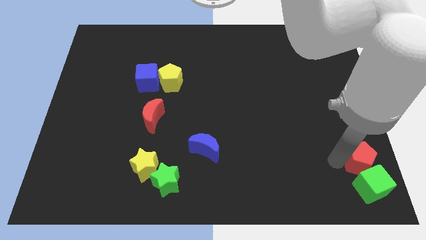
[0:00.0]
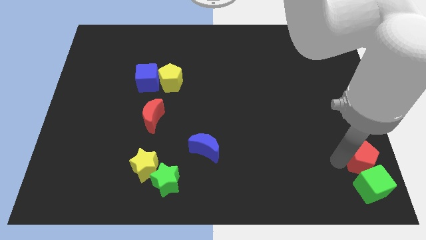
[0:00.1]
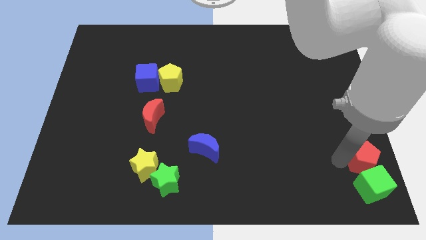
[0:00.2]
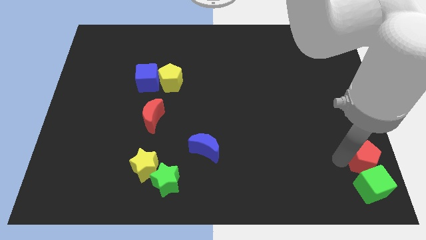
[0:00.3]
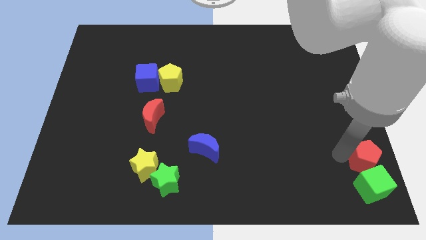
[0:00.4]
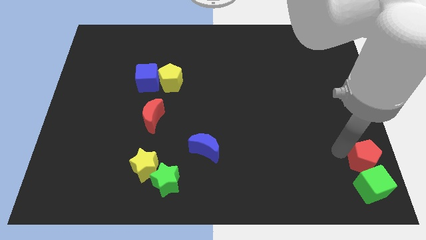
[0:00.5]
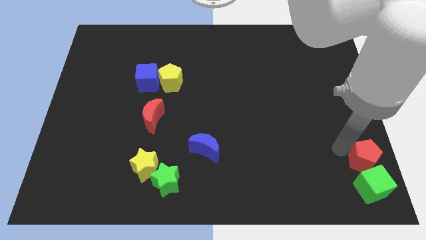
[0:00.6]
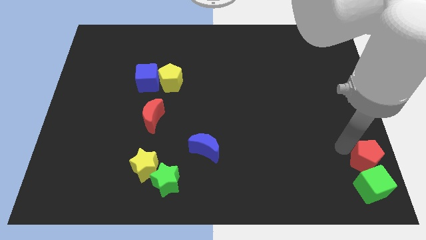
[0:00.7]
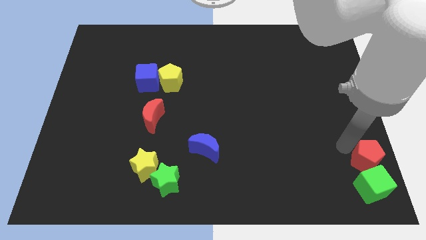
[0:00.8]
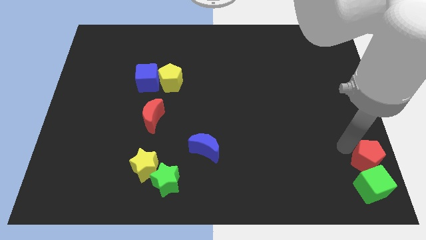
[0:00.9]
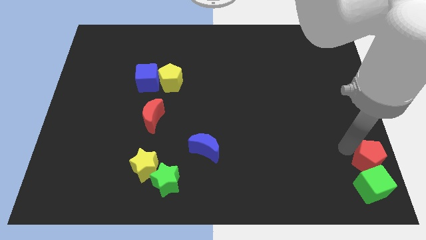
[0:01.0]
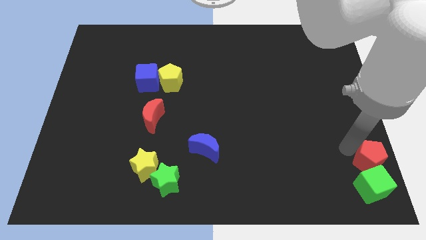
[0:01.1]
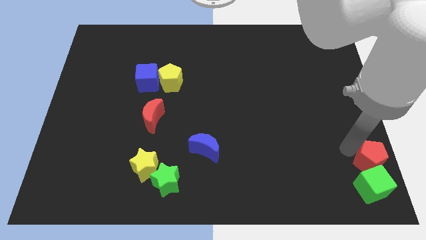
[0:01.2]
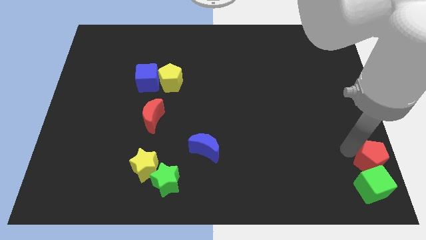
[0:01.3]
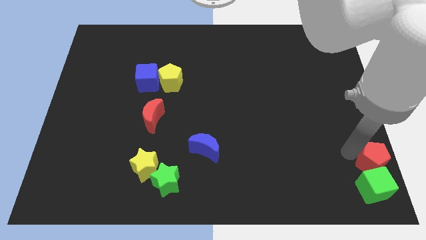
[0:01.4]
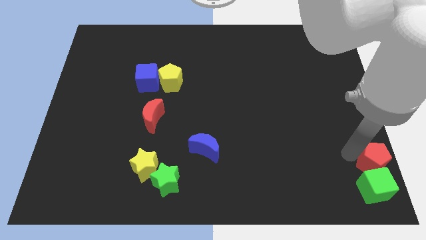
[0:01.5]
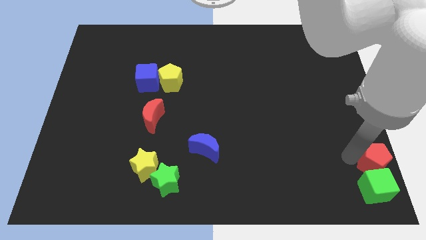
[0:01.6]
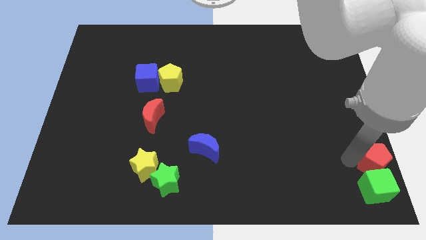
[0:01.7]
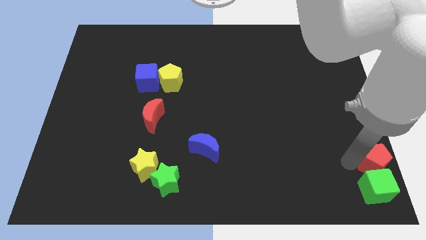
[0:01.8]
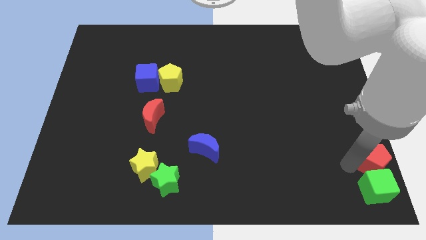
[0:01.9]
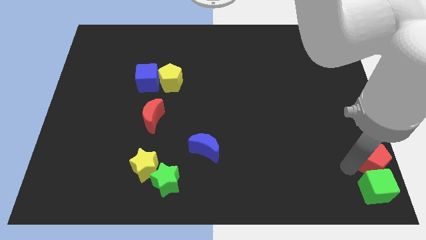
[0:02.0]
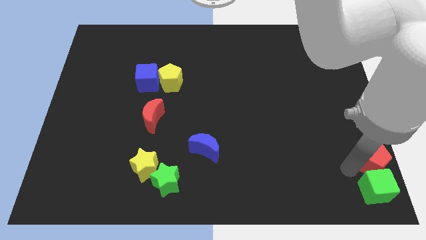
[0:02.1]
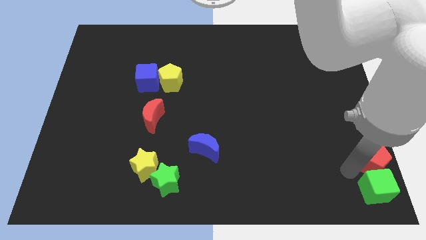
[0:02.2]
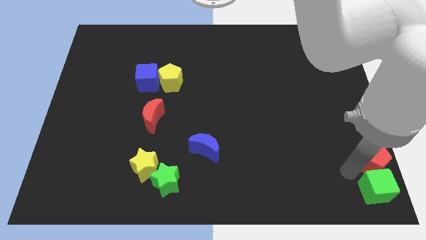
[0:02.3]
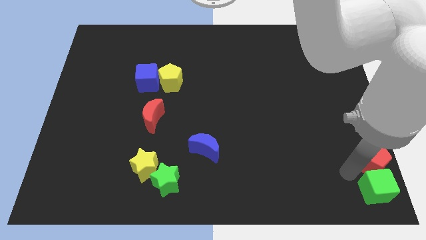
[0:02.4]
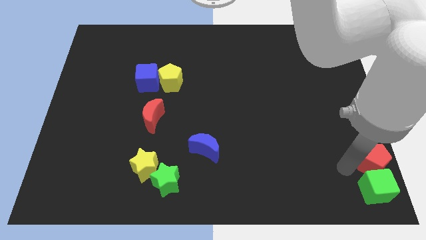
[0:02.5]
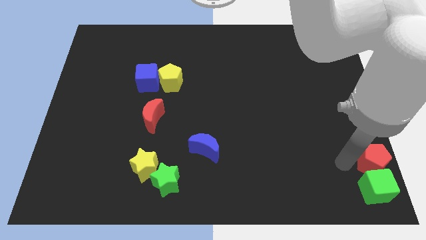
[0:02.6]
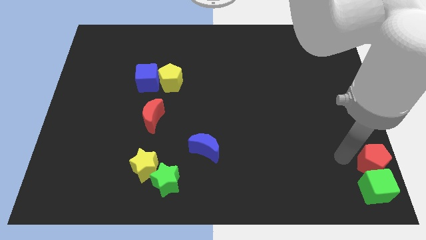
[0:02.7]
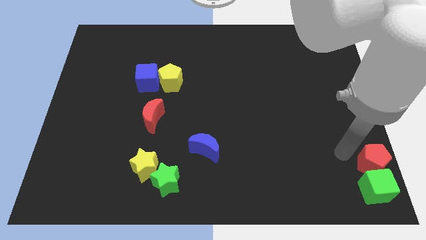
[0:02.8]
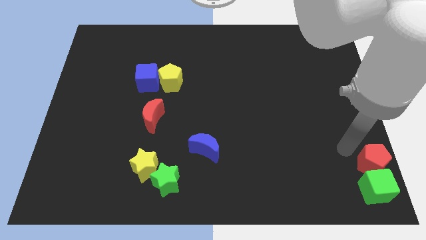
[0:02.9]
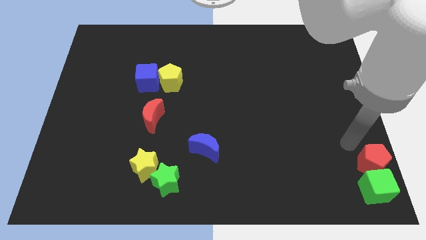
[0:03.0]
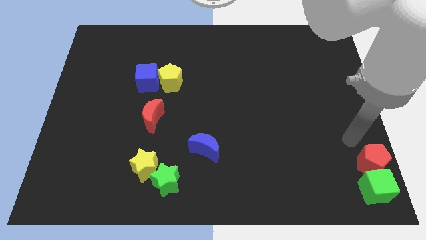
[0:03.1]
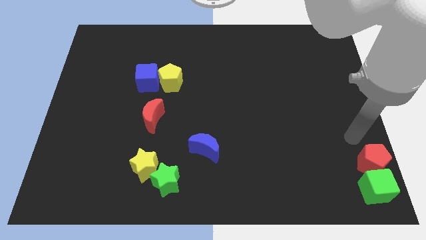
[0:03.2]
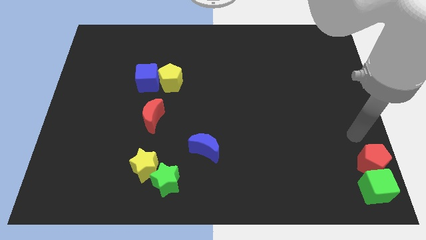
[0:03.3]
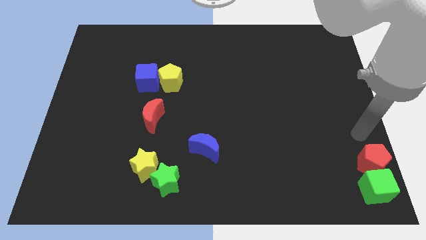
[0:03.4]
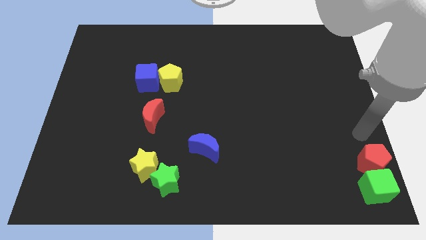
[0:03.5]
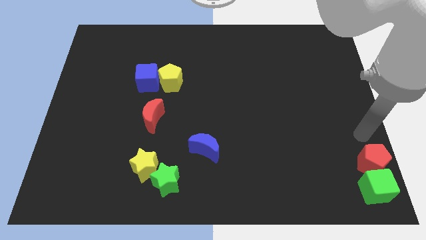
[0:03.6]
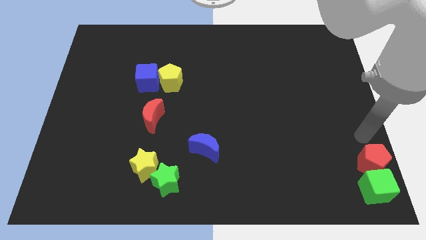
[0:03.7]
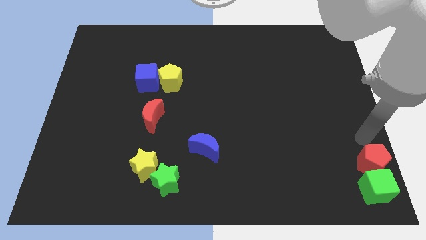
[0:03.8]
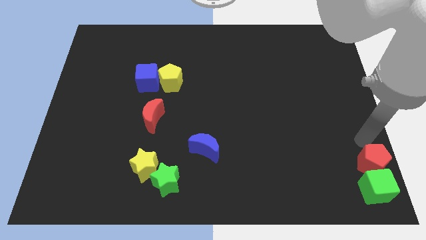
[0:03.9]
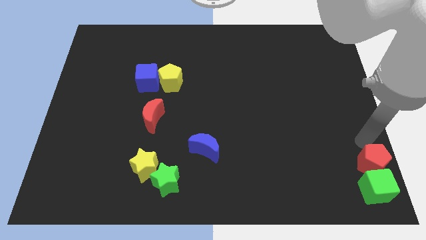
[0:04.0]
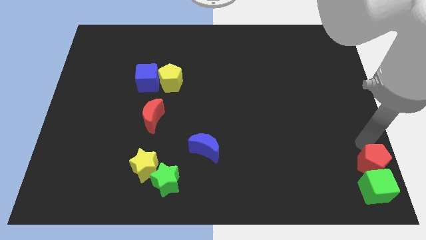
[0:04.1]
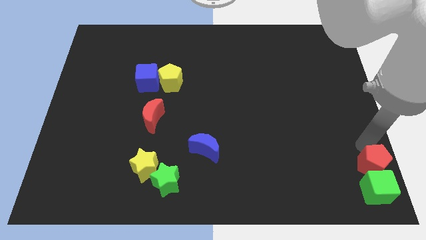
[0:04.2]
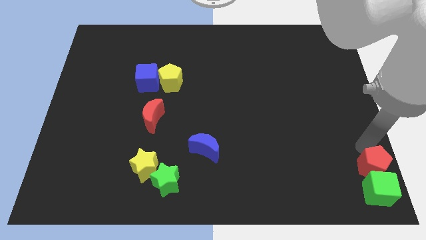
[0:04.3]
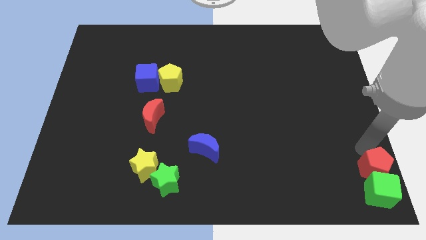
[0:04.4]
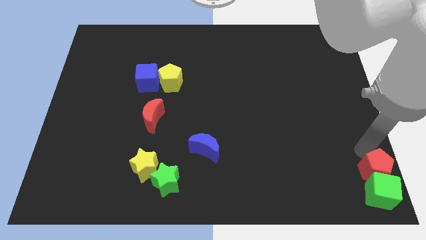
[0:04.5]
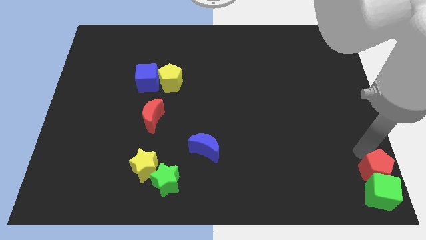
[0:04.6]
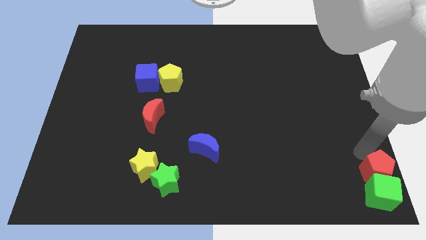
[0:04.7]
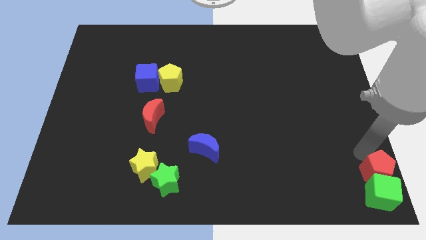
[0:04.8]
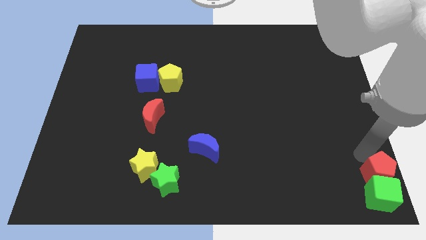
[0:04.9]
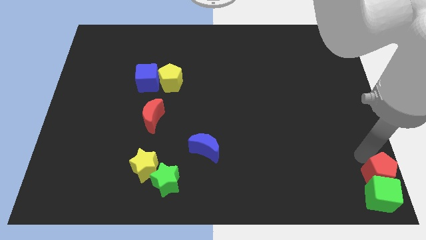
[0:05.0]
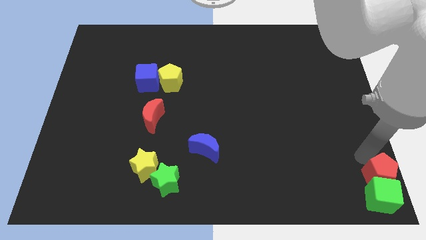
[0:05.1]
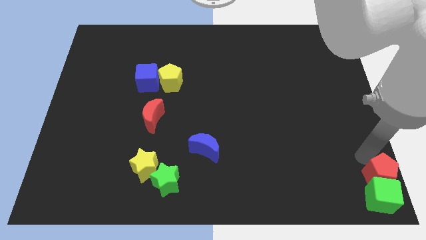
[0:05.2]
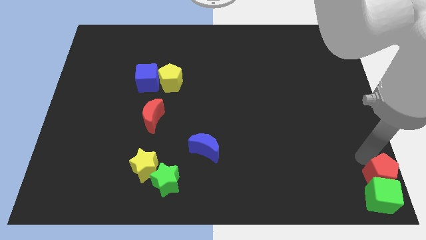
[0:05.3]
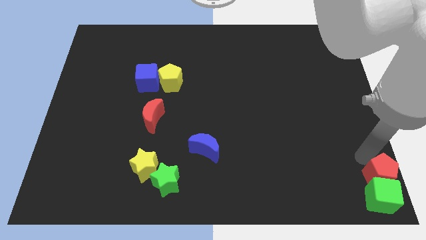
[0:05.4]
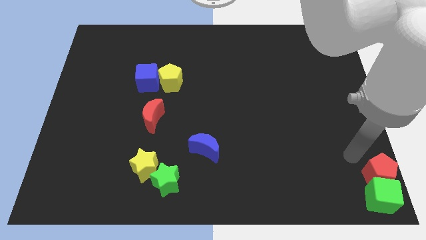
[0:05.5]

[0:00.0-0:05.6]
move red pentagon to the top of green cube

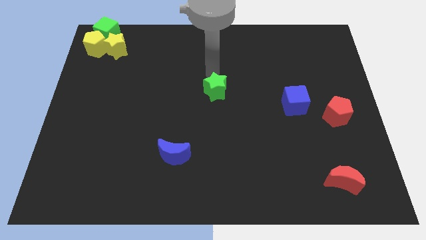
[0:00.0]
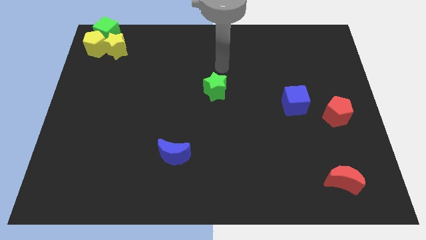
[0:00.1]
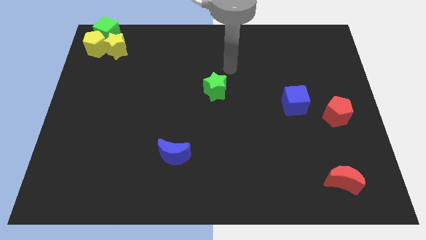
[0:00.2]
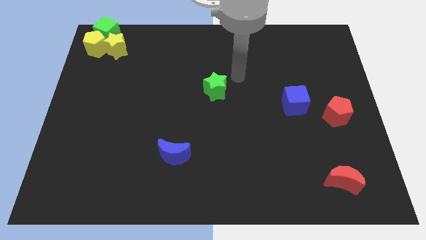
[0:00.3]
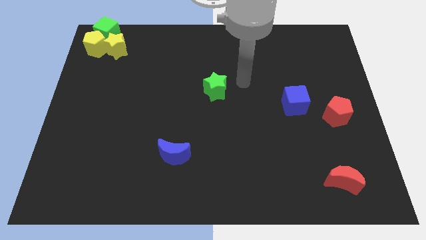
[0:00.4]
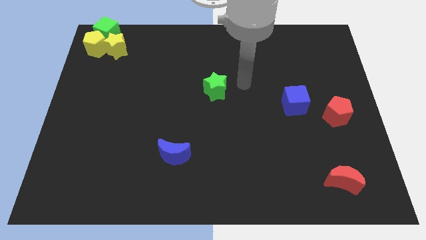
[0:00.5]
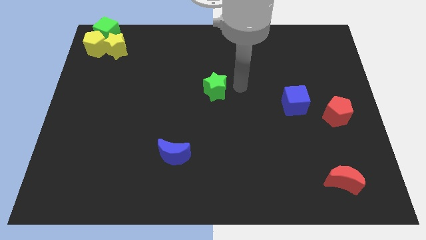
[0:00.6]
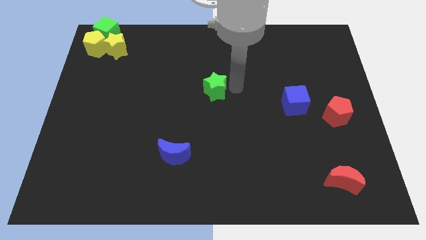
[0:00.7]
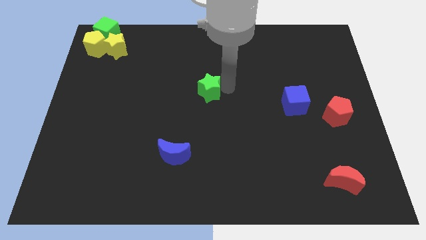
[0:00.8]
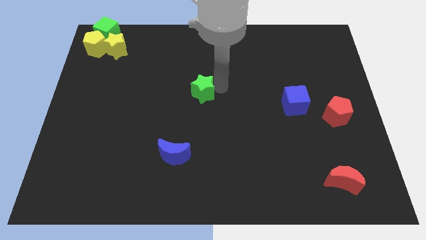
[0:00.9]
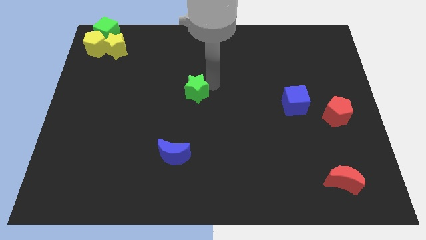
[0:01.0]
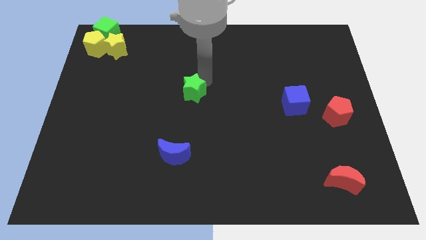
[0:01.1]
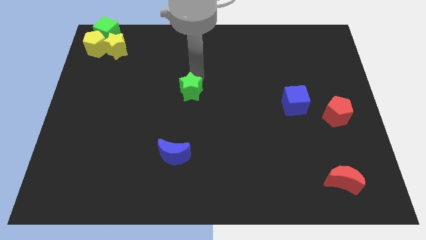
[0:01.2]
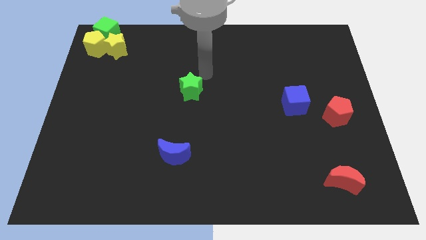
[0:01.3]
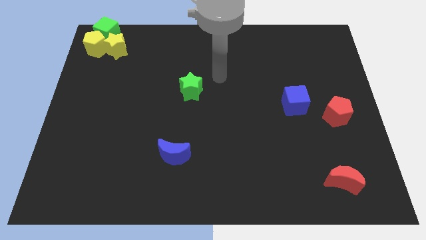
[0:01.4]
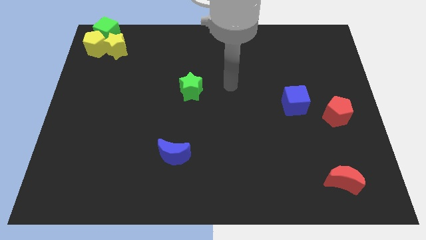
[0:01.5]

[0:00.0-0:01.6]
move the green star slightly left

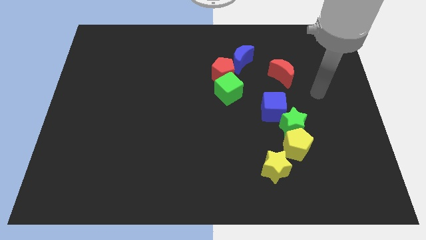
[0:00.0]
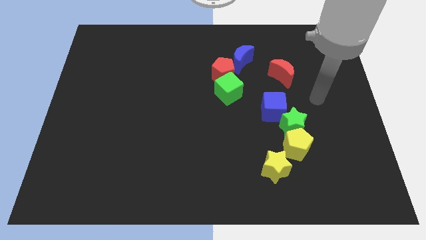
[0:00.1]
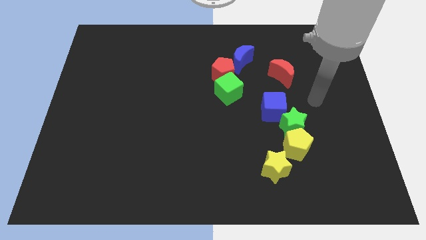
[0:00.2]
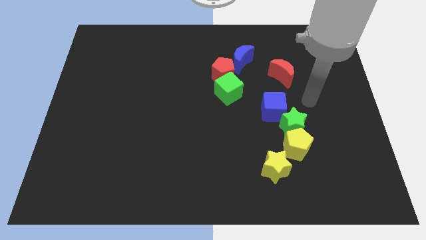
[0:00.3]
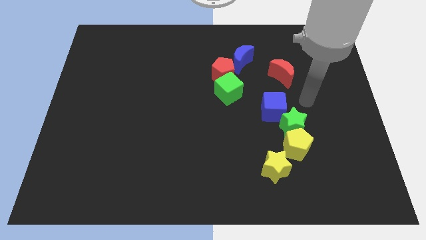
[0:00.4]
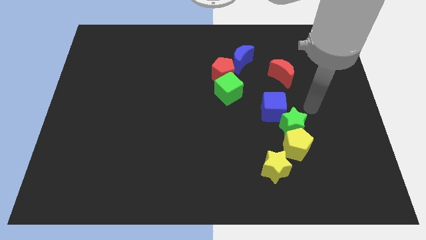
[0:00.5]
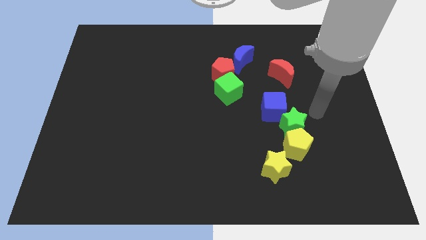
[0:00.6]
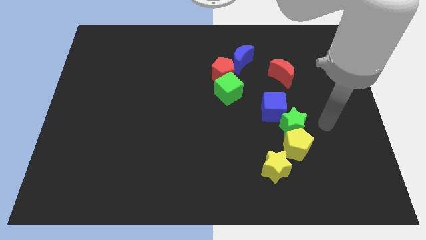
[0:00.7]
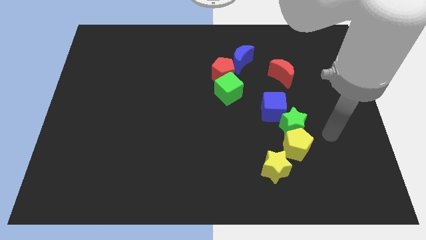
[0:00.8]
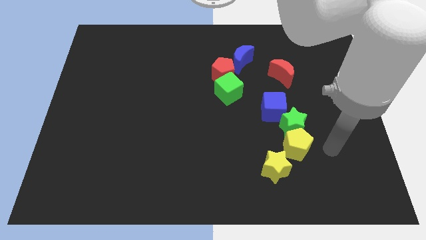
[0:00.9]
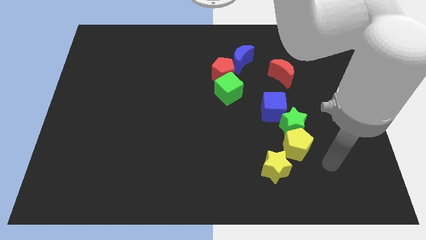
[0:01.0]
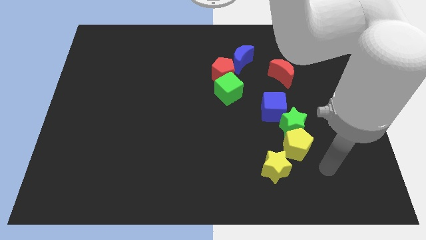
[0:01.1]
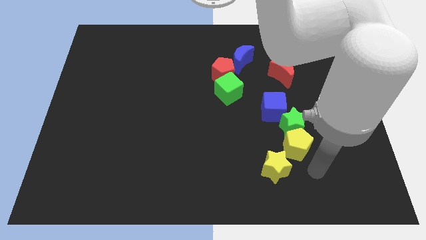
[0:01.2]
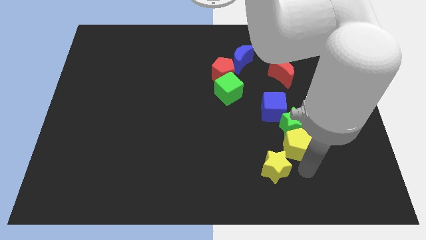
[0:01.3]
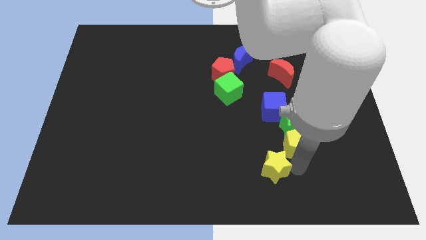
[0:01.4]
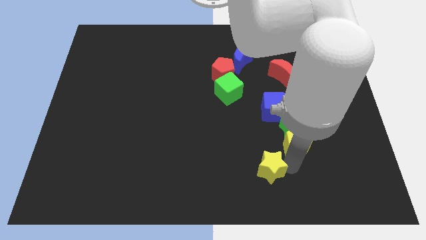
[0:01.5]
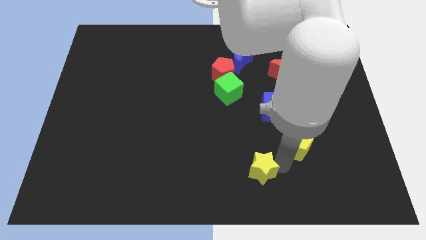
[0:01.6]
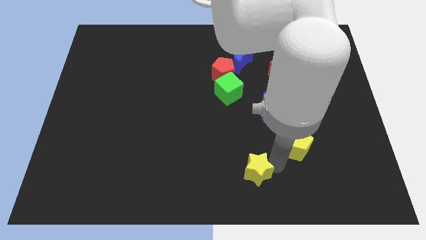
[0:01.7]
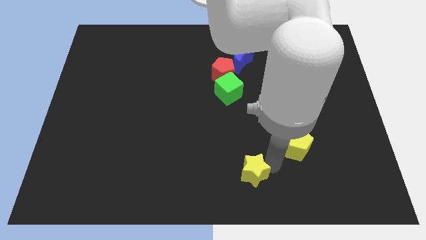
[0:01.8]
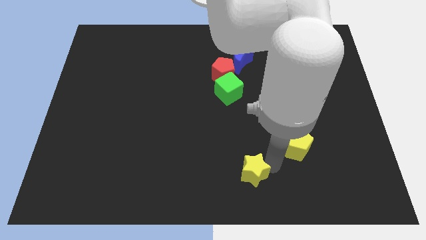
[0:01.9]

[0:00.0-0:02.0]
separate yellow star from the yellow pentagon
